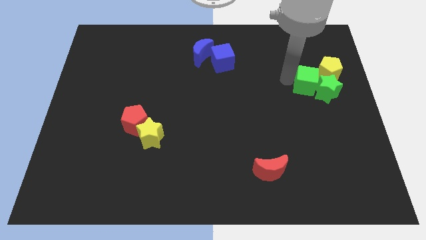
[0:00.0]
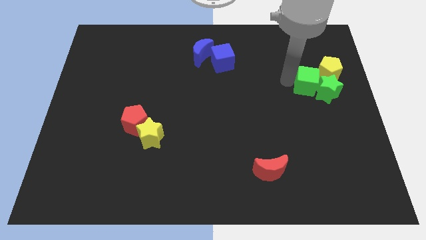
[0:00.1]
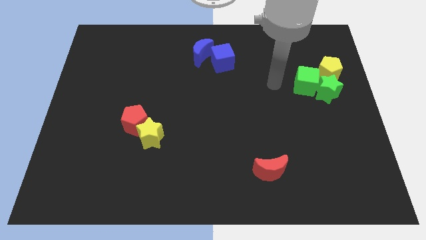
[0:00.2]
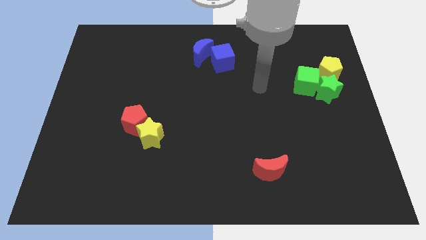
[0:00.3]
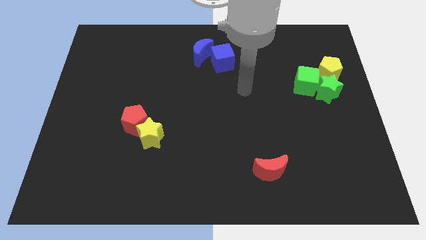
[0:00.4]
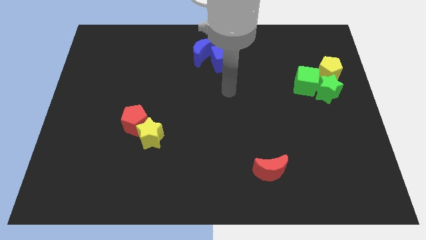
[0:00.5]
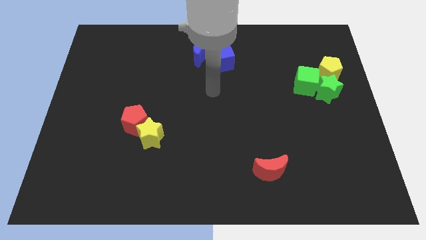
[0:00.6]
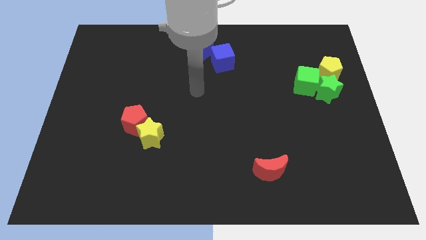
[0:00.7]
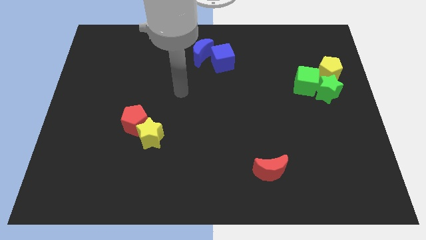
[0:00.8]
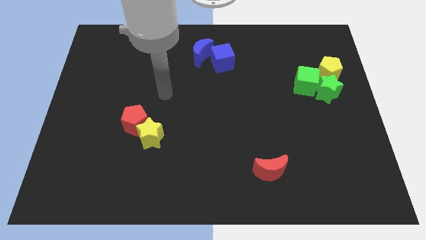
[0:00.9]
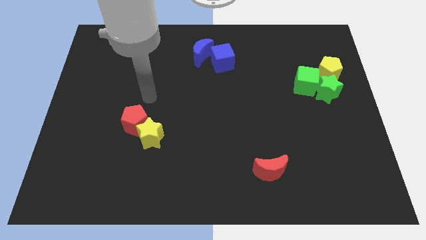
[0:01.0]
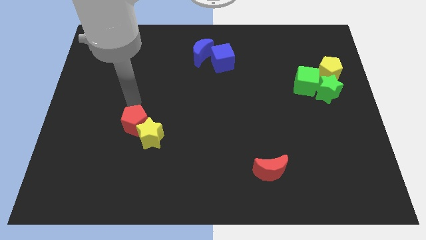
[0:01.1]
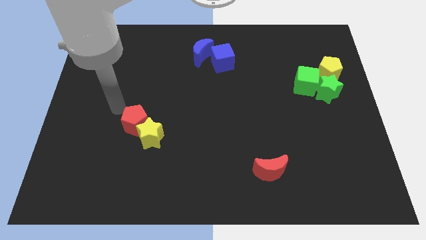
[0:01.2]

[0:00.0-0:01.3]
move your arm close to the red pentagon

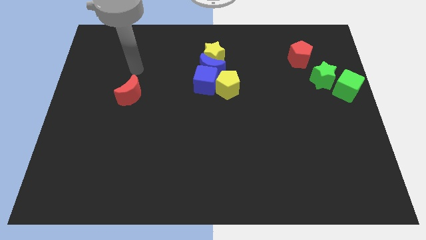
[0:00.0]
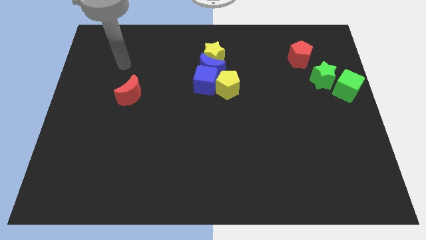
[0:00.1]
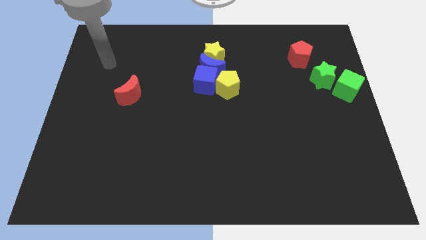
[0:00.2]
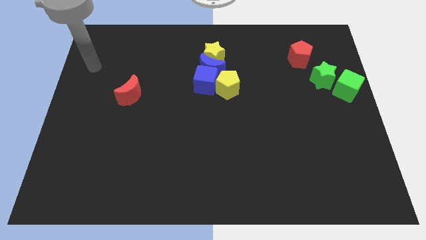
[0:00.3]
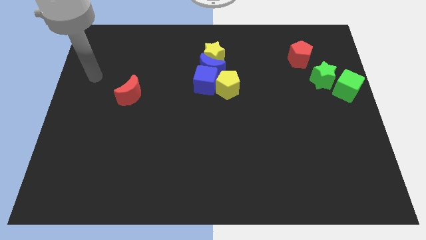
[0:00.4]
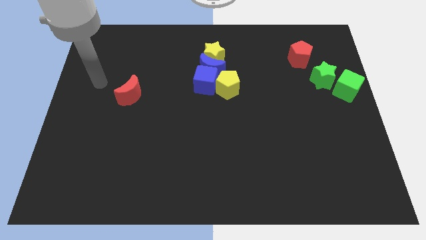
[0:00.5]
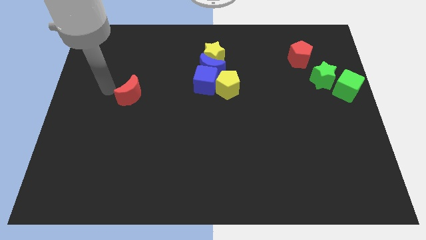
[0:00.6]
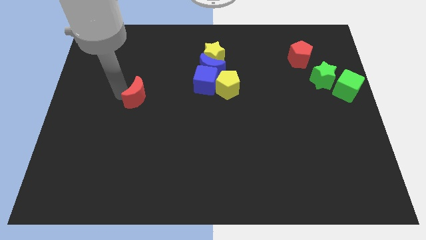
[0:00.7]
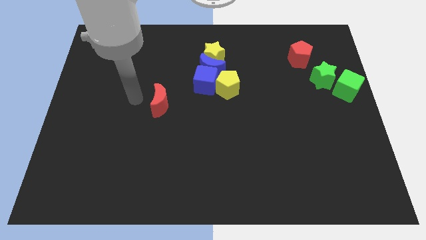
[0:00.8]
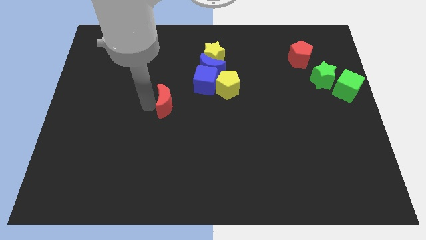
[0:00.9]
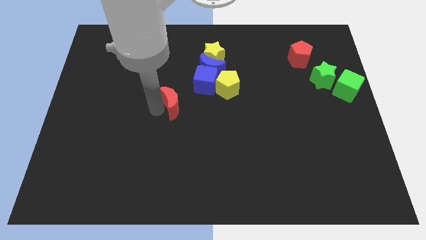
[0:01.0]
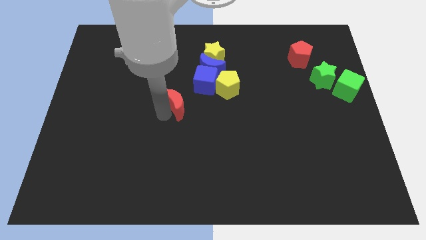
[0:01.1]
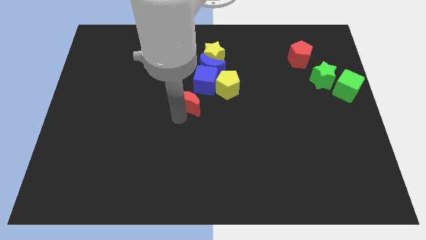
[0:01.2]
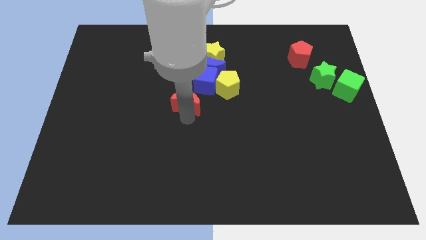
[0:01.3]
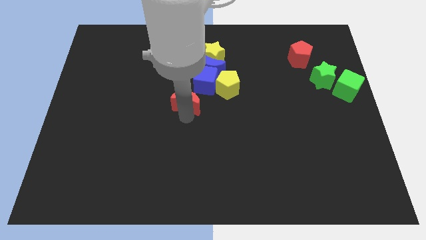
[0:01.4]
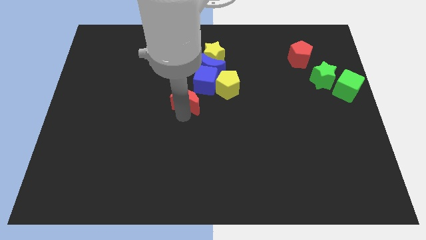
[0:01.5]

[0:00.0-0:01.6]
move the red moon to the center

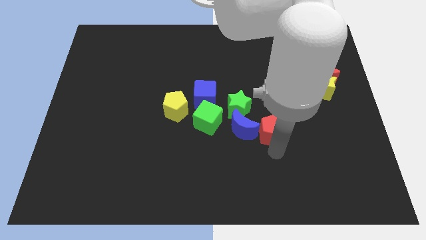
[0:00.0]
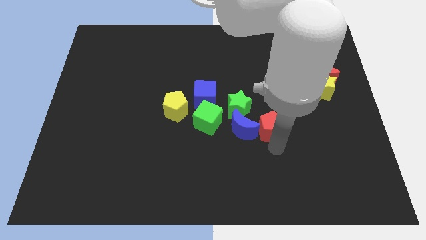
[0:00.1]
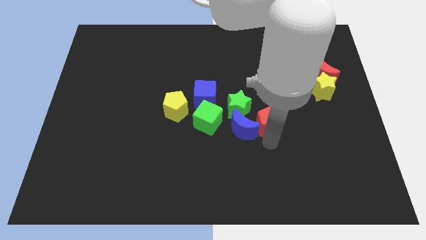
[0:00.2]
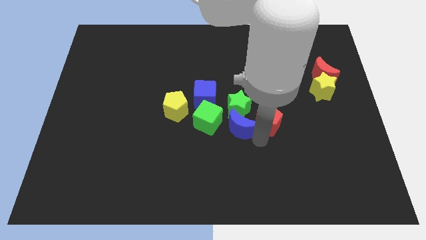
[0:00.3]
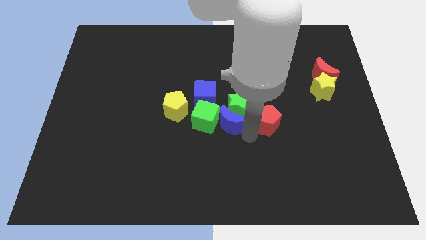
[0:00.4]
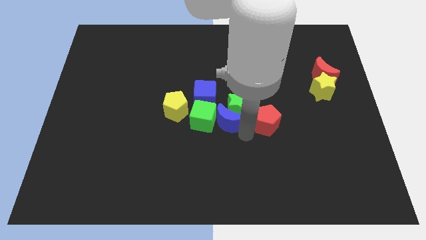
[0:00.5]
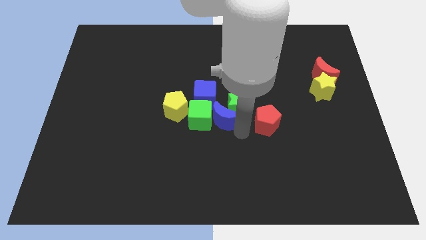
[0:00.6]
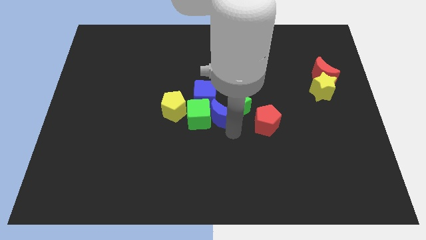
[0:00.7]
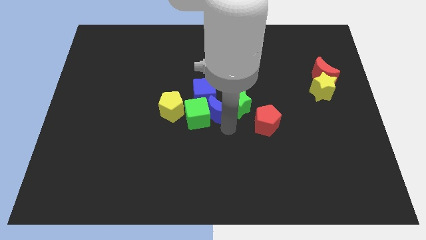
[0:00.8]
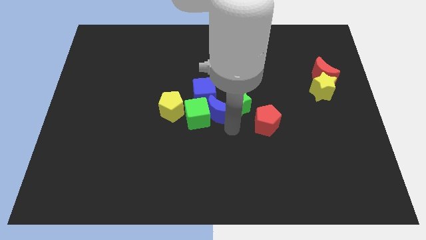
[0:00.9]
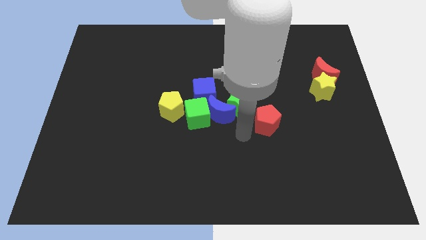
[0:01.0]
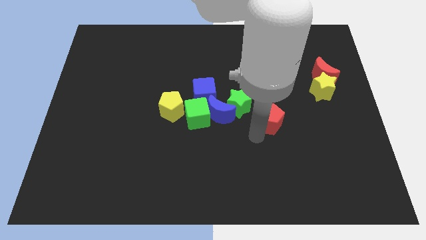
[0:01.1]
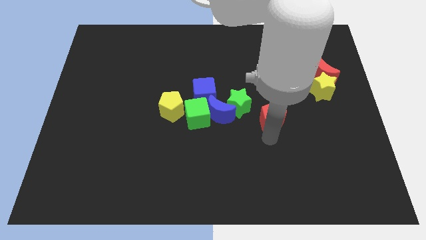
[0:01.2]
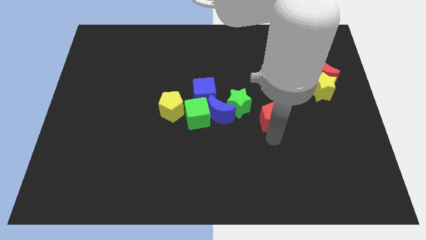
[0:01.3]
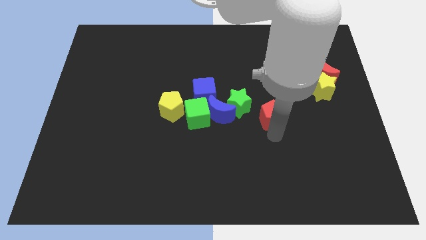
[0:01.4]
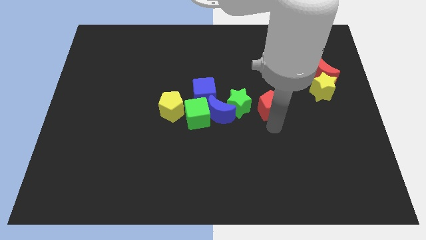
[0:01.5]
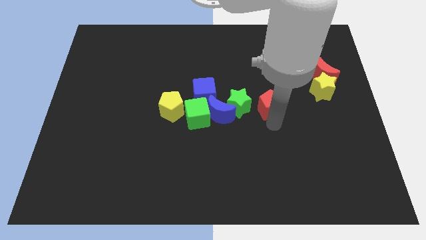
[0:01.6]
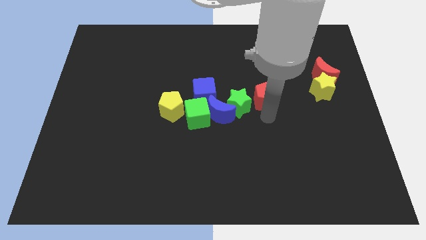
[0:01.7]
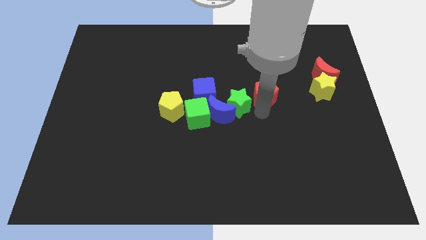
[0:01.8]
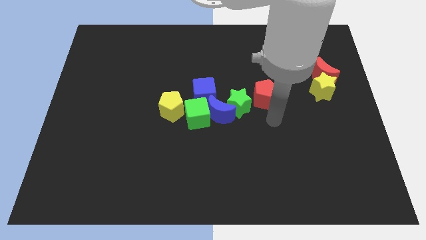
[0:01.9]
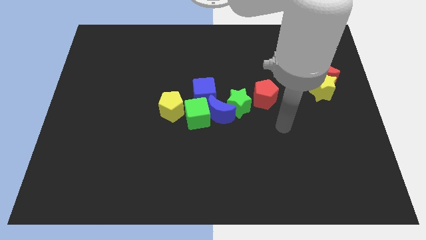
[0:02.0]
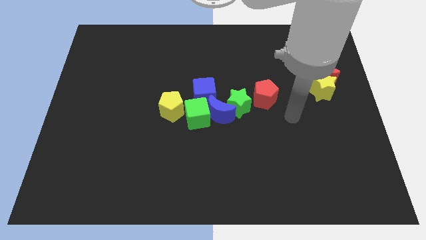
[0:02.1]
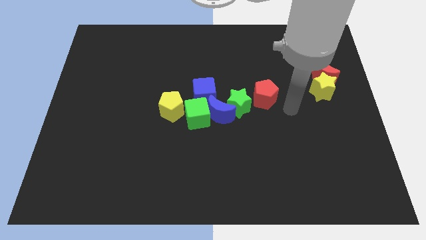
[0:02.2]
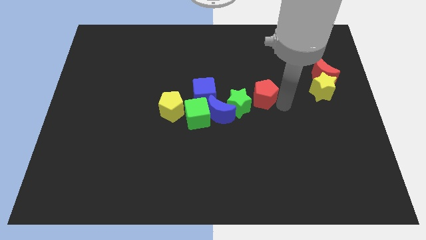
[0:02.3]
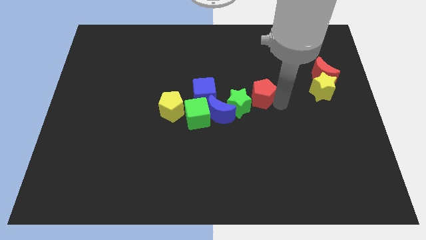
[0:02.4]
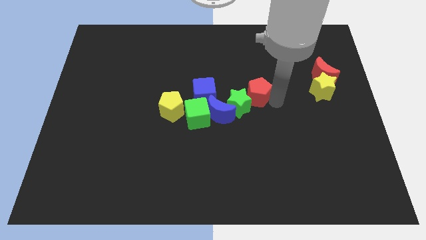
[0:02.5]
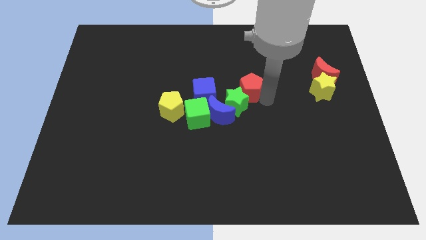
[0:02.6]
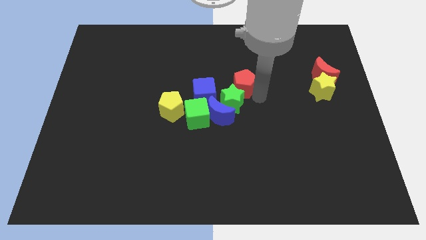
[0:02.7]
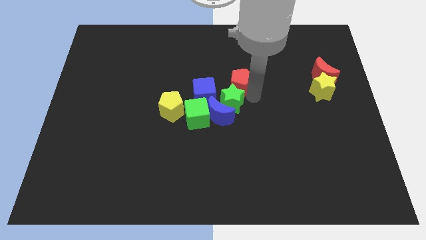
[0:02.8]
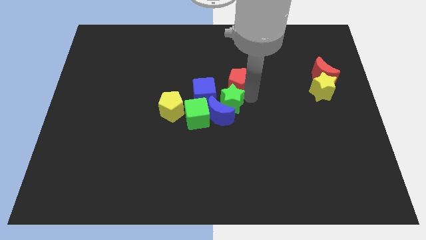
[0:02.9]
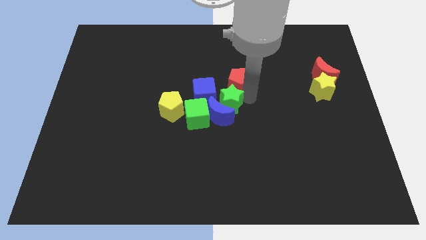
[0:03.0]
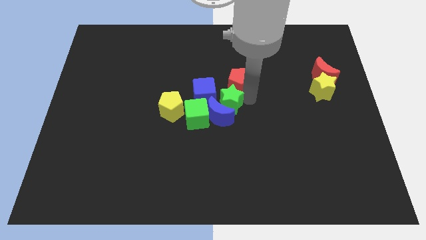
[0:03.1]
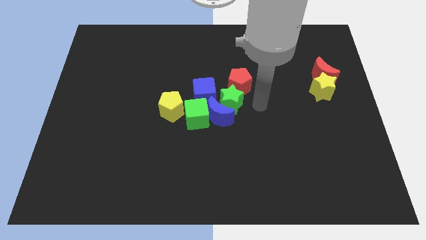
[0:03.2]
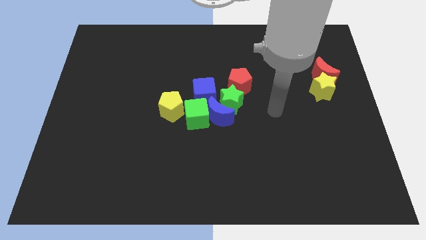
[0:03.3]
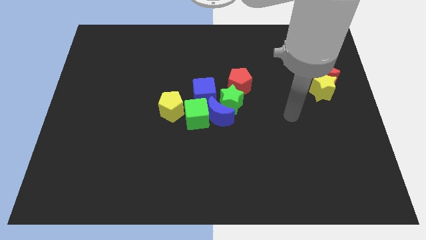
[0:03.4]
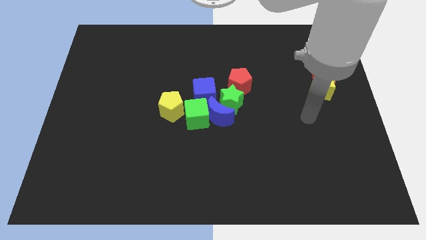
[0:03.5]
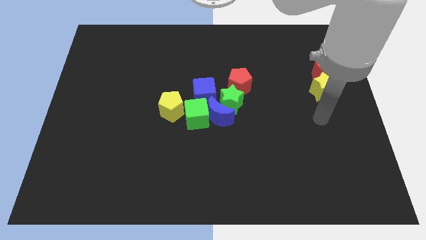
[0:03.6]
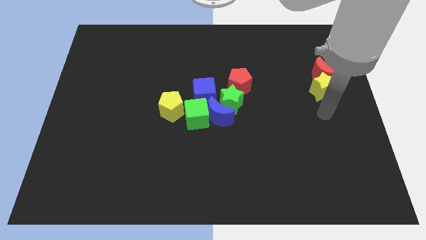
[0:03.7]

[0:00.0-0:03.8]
push blue crescent into blue cube

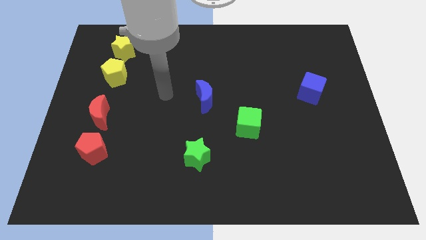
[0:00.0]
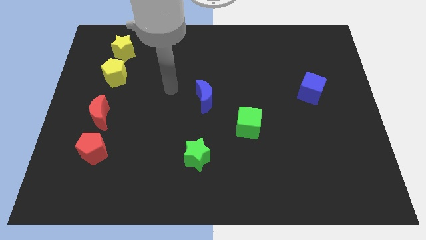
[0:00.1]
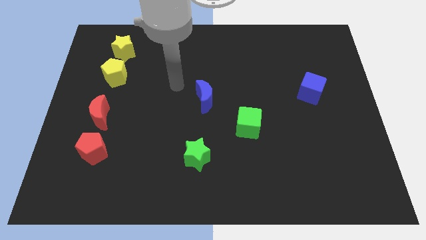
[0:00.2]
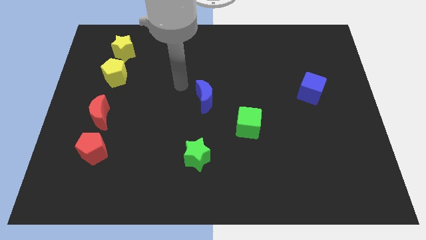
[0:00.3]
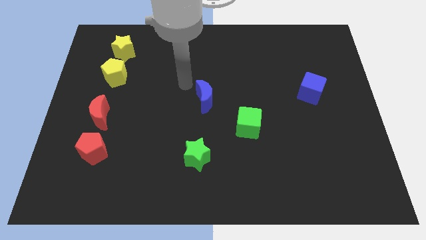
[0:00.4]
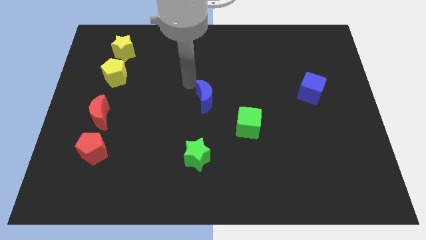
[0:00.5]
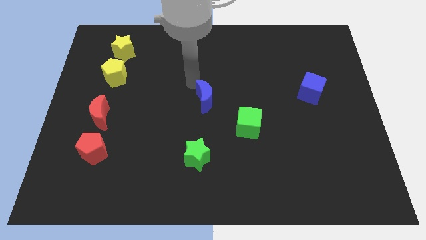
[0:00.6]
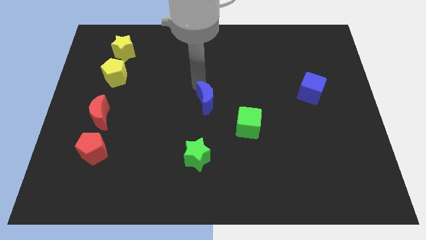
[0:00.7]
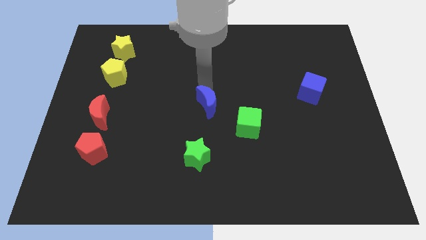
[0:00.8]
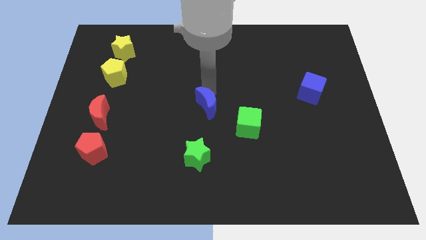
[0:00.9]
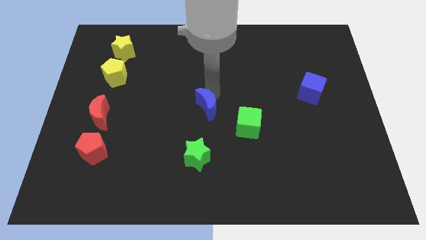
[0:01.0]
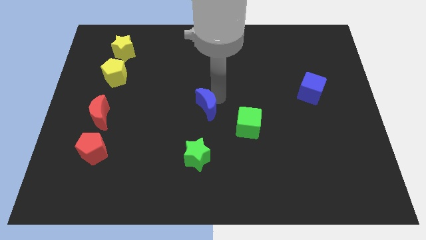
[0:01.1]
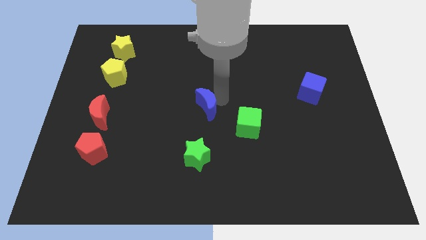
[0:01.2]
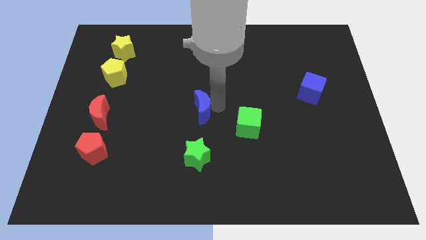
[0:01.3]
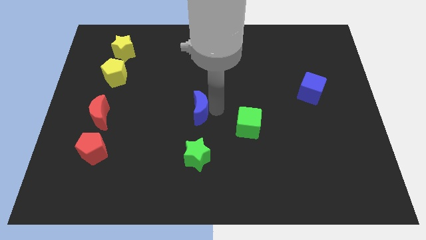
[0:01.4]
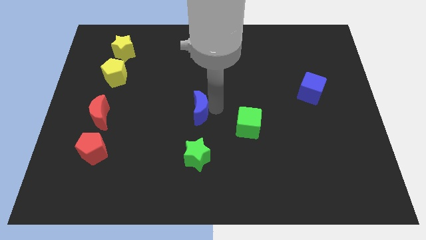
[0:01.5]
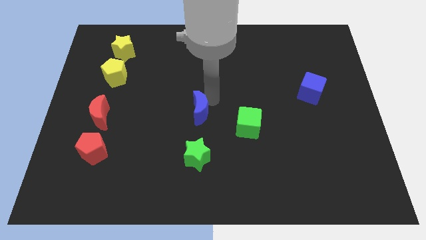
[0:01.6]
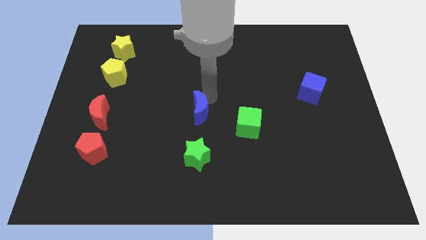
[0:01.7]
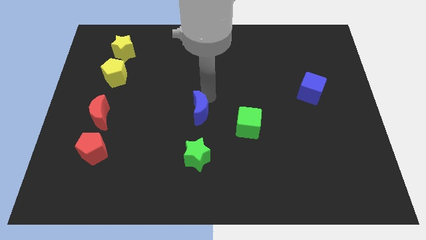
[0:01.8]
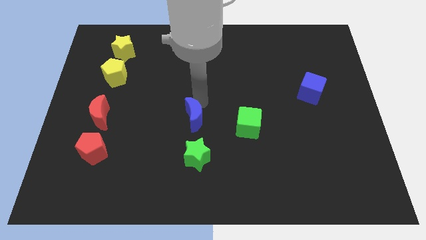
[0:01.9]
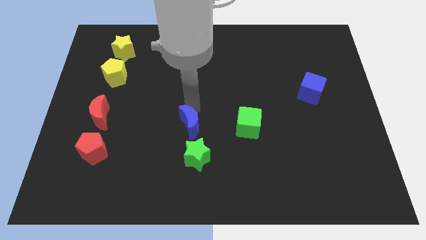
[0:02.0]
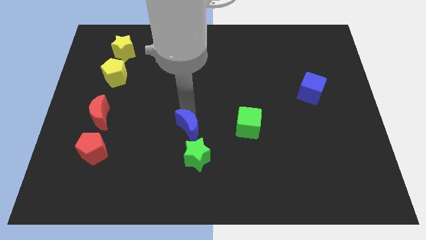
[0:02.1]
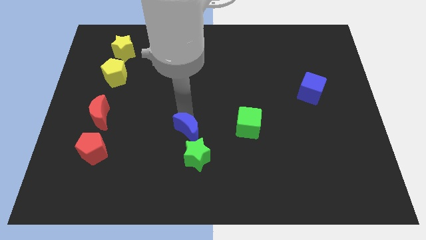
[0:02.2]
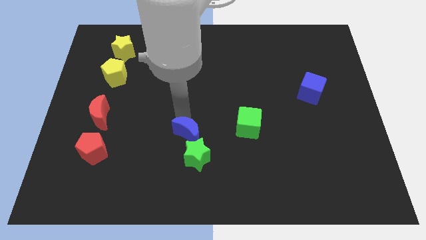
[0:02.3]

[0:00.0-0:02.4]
push the blue moon above the green star
